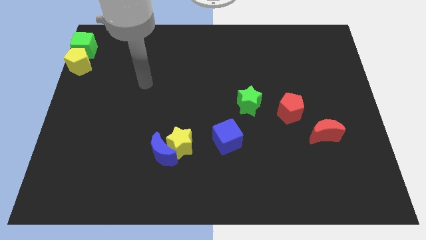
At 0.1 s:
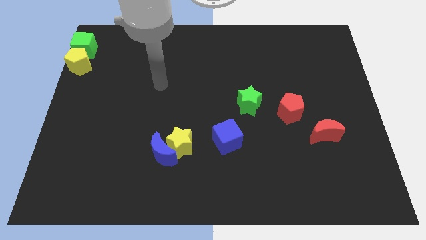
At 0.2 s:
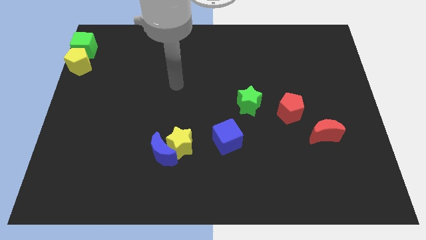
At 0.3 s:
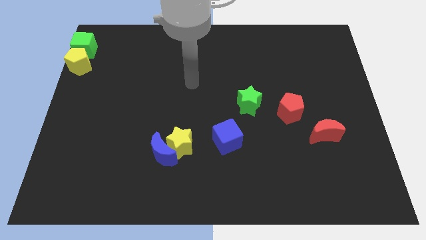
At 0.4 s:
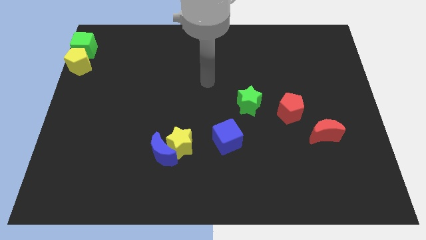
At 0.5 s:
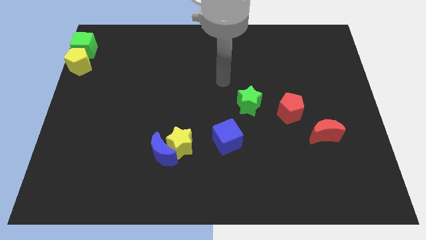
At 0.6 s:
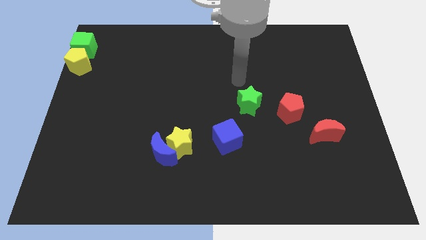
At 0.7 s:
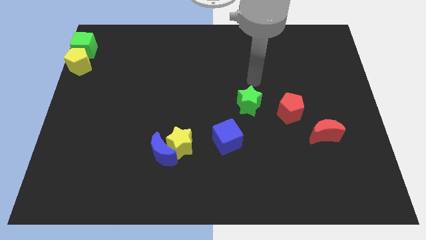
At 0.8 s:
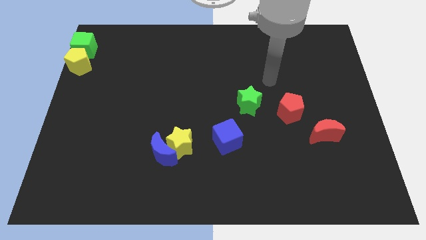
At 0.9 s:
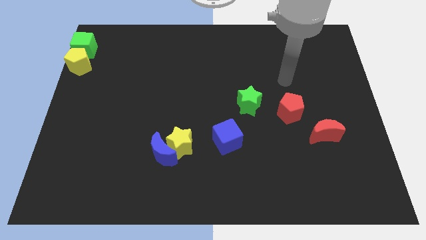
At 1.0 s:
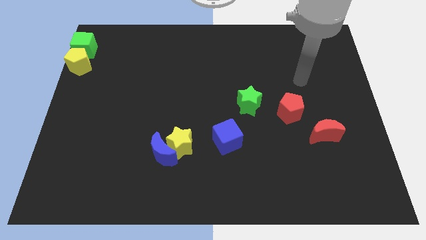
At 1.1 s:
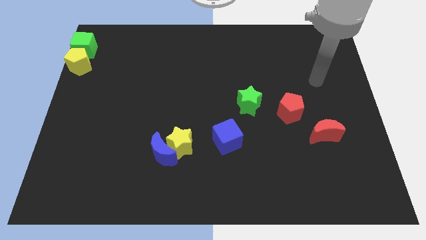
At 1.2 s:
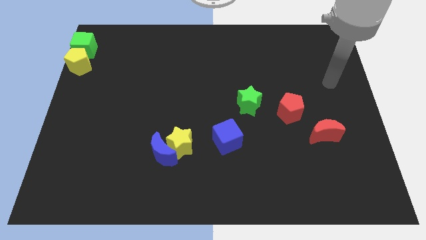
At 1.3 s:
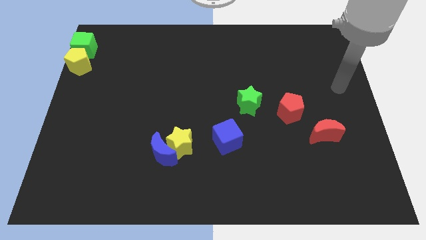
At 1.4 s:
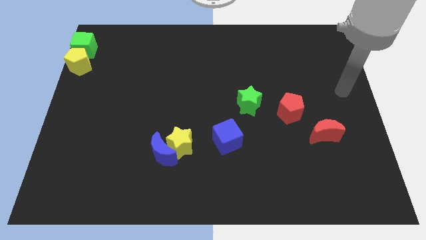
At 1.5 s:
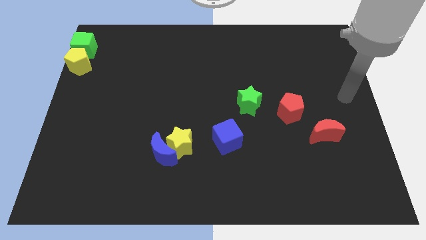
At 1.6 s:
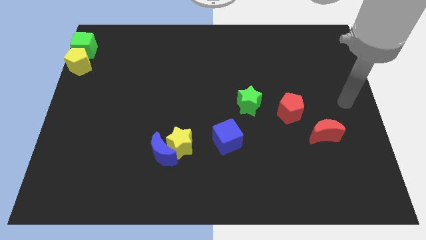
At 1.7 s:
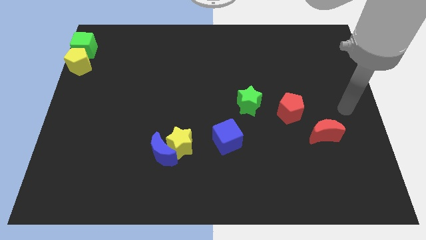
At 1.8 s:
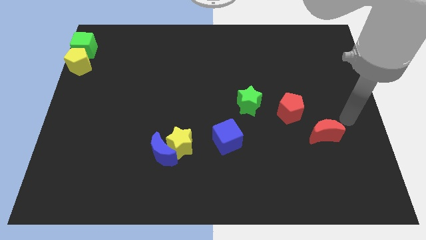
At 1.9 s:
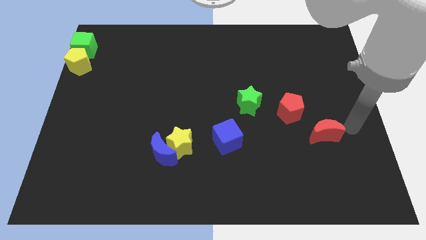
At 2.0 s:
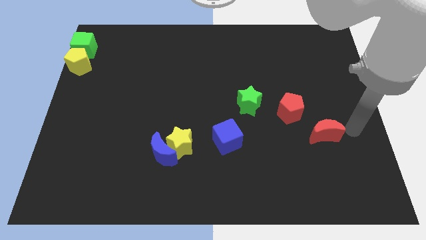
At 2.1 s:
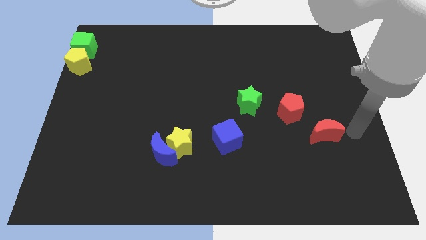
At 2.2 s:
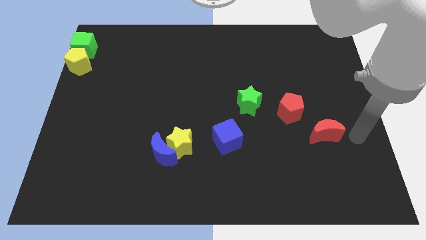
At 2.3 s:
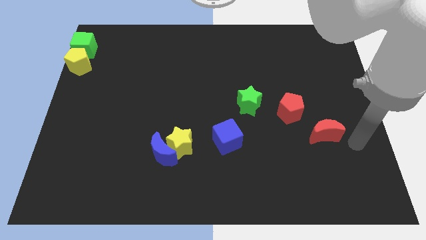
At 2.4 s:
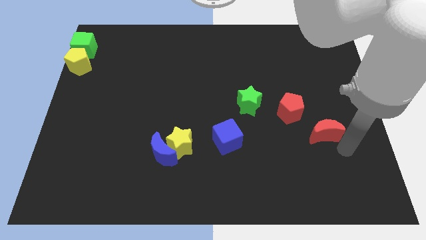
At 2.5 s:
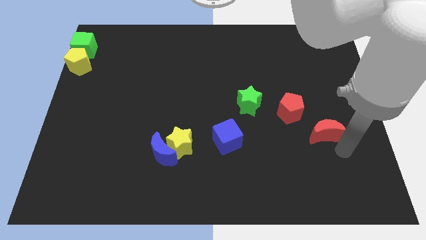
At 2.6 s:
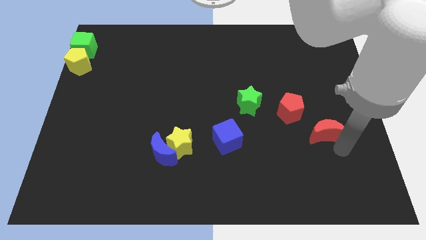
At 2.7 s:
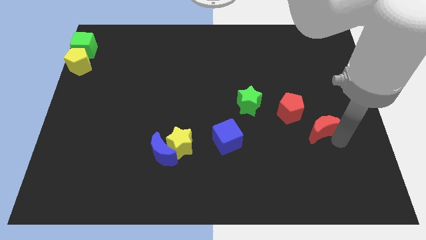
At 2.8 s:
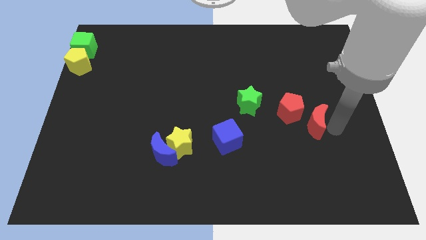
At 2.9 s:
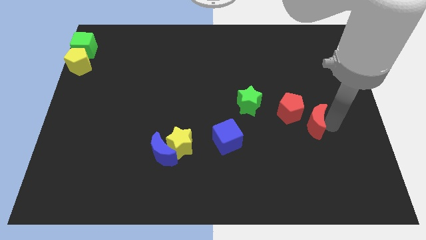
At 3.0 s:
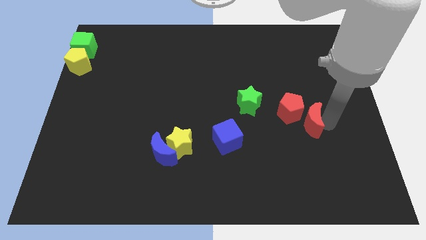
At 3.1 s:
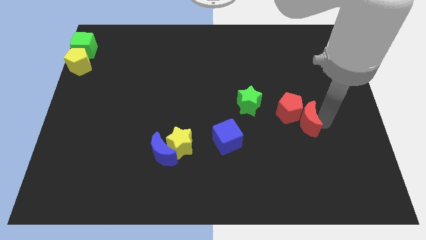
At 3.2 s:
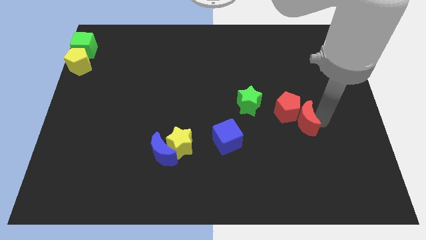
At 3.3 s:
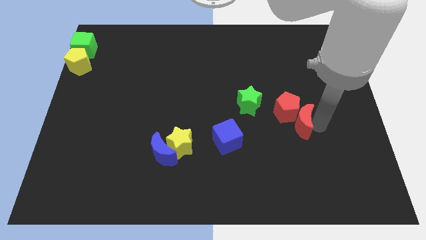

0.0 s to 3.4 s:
push the red moon into the red pentagon

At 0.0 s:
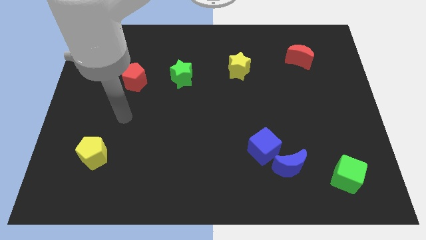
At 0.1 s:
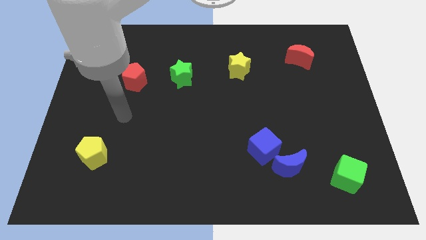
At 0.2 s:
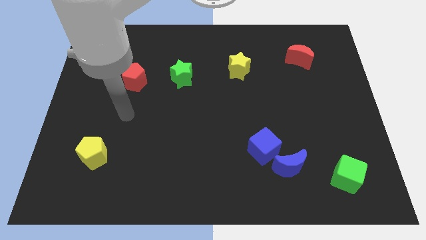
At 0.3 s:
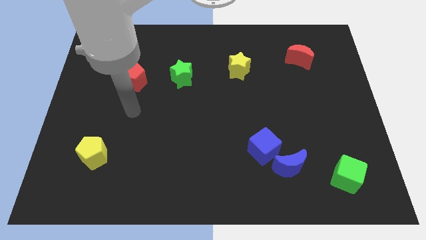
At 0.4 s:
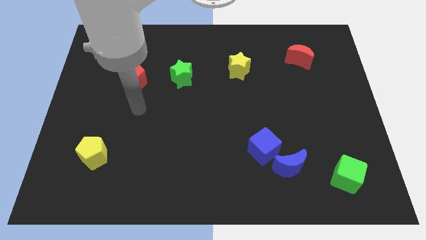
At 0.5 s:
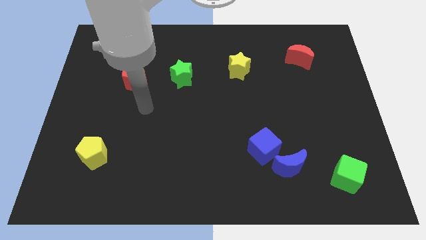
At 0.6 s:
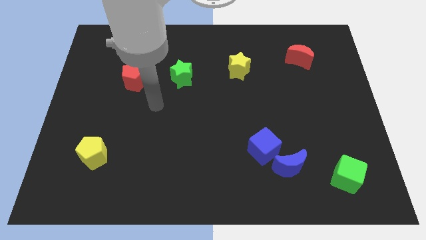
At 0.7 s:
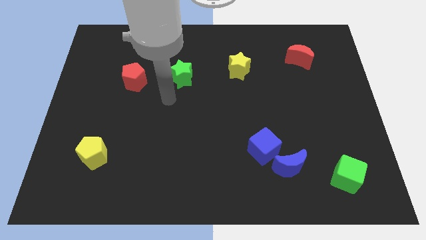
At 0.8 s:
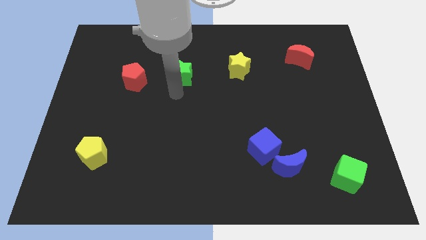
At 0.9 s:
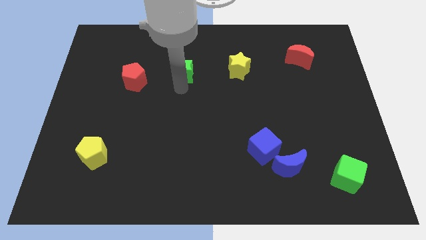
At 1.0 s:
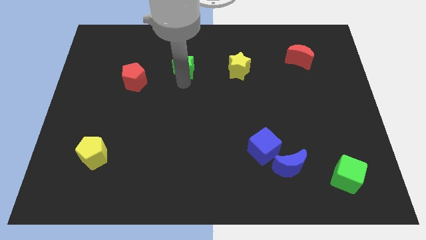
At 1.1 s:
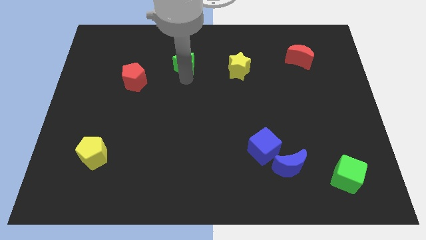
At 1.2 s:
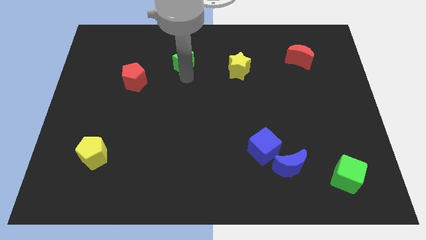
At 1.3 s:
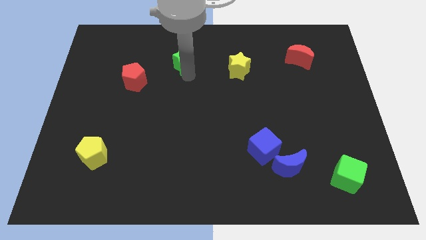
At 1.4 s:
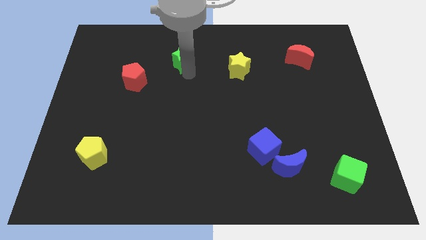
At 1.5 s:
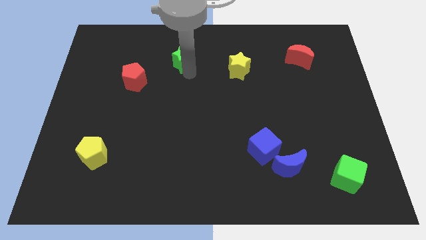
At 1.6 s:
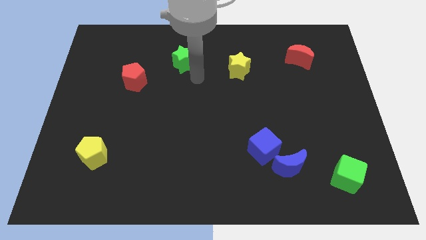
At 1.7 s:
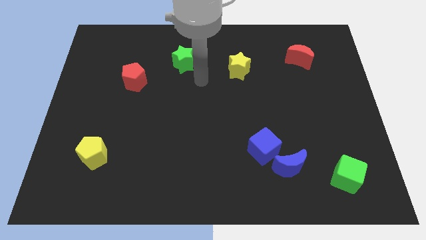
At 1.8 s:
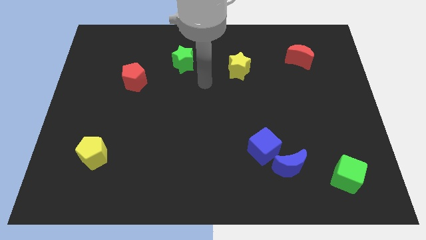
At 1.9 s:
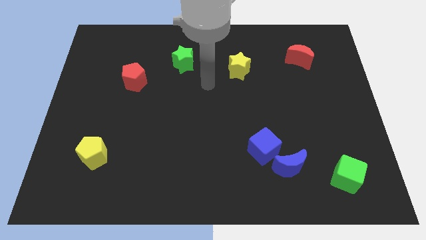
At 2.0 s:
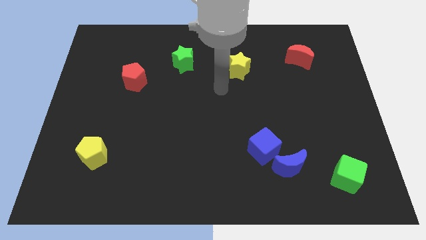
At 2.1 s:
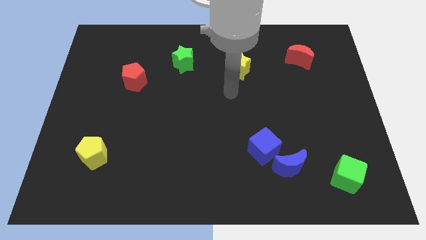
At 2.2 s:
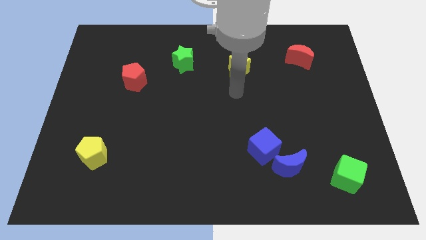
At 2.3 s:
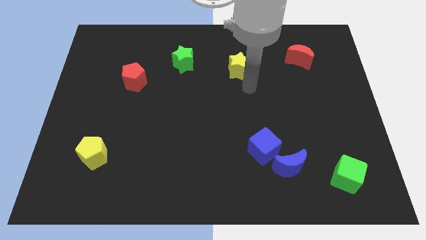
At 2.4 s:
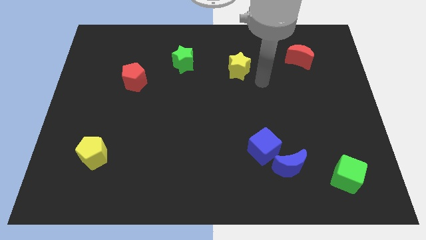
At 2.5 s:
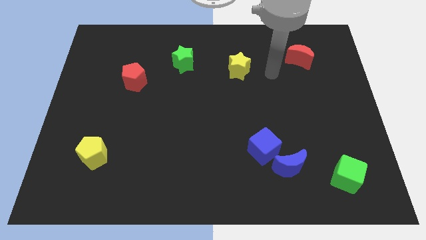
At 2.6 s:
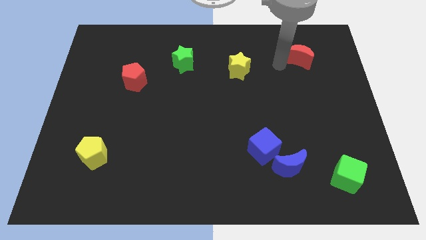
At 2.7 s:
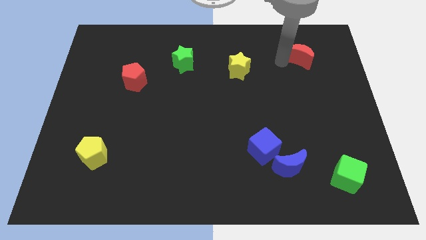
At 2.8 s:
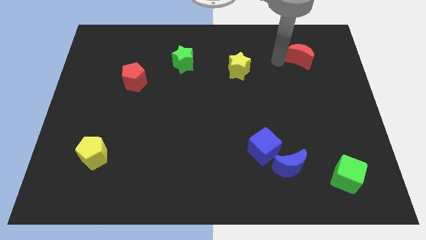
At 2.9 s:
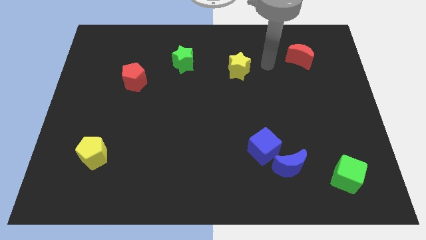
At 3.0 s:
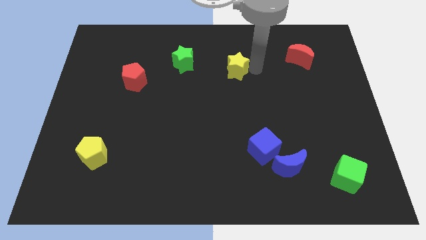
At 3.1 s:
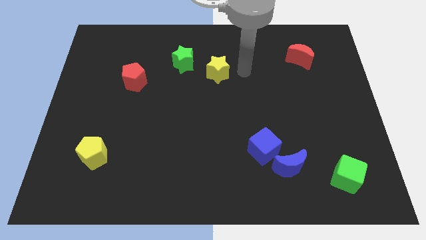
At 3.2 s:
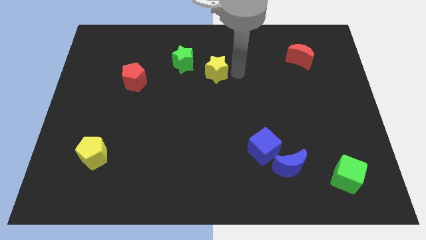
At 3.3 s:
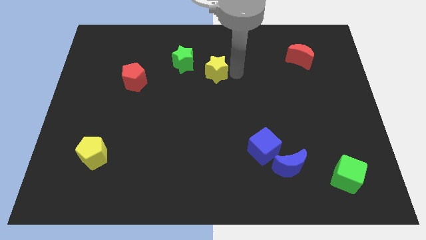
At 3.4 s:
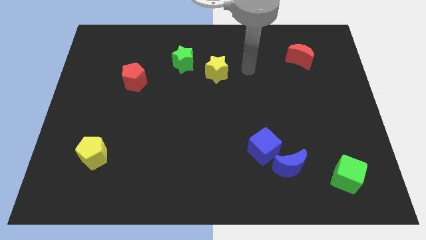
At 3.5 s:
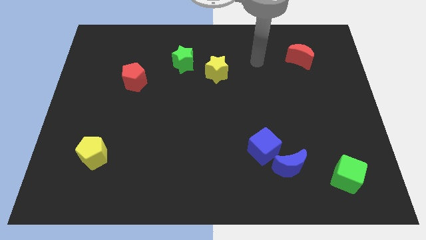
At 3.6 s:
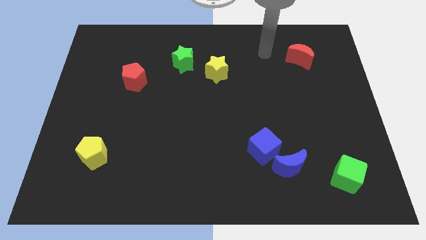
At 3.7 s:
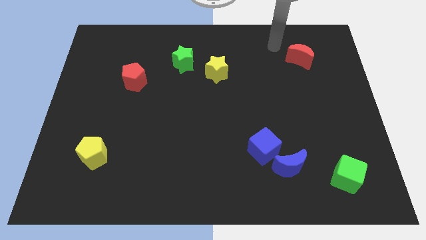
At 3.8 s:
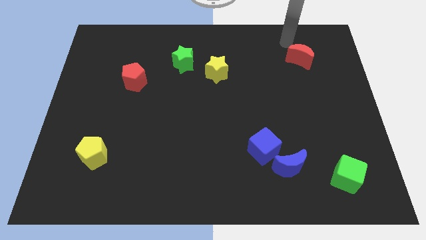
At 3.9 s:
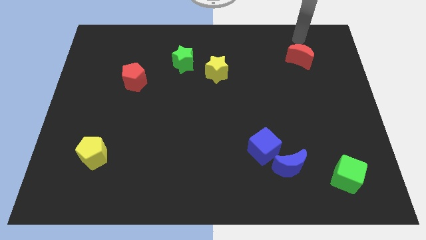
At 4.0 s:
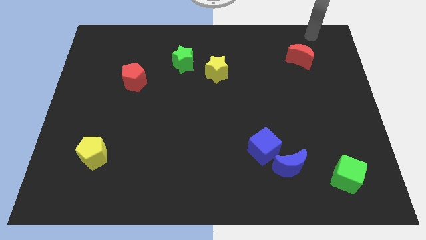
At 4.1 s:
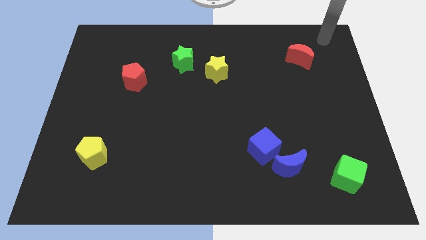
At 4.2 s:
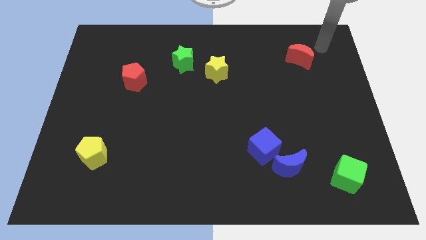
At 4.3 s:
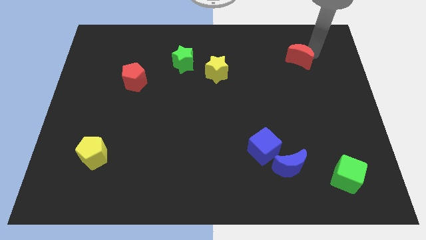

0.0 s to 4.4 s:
move yellow star a bit close to right of green star

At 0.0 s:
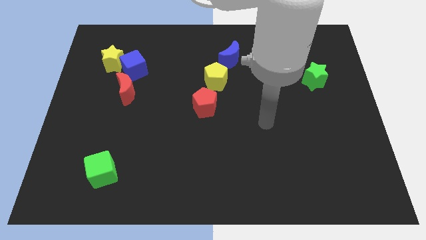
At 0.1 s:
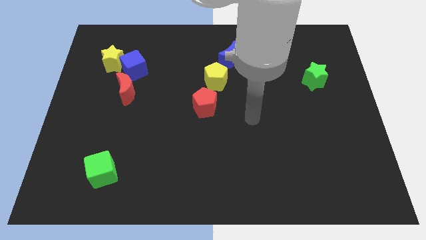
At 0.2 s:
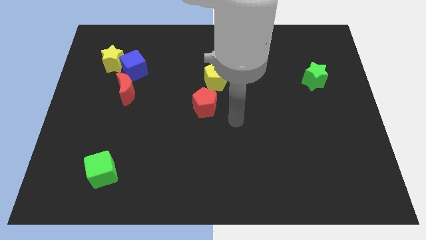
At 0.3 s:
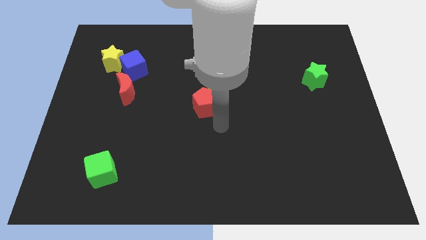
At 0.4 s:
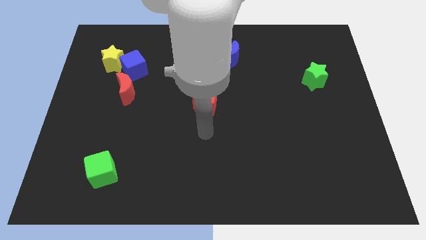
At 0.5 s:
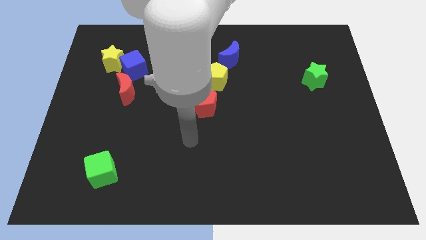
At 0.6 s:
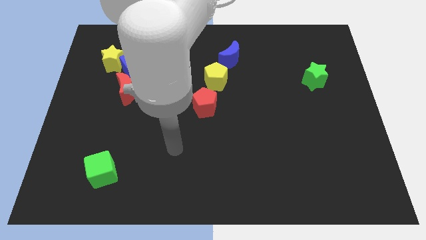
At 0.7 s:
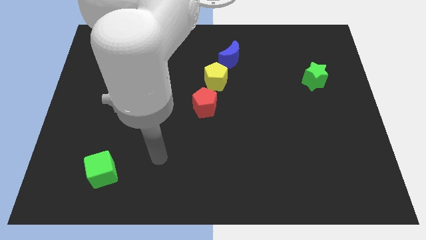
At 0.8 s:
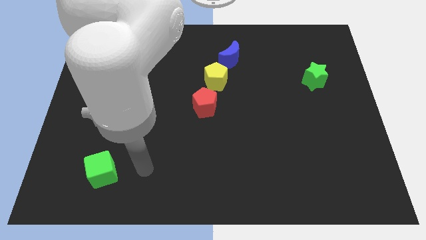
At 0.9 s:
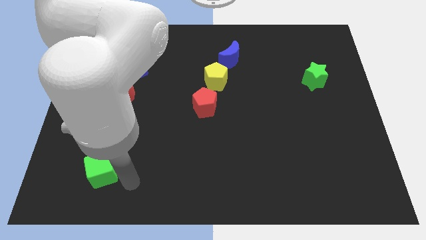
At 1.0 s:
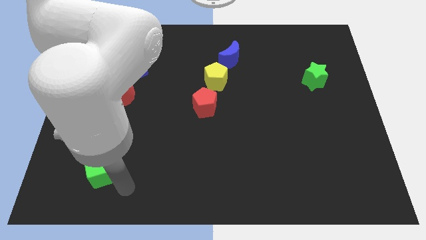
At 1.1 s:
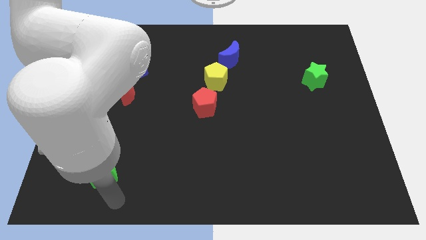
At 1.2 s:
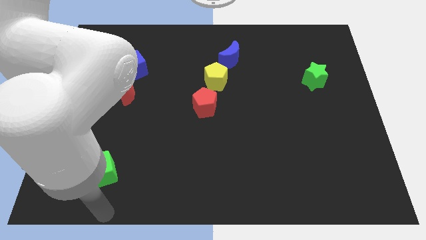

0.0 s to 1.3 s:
move the arm to the bottom of the green cube
